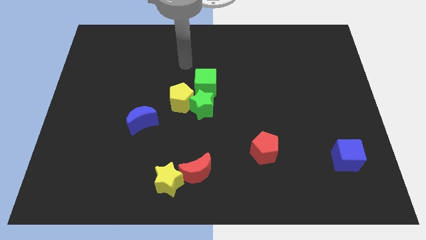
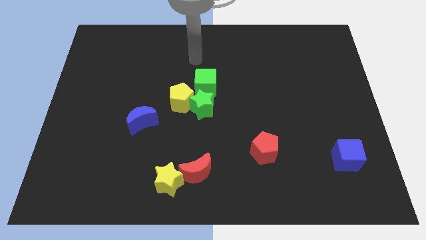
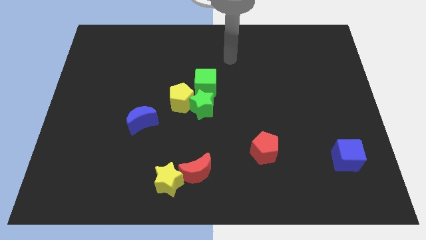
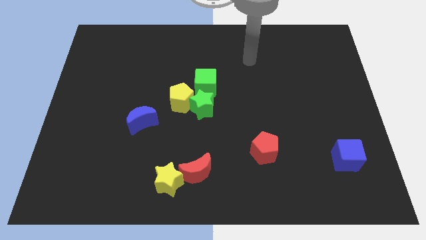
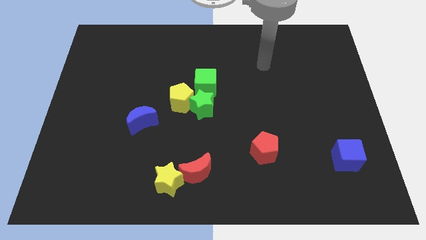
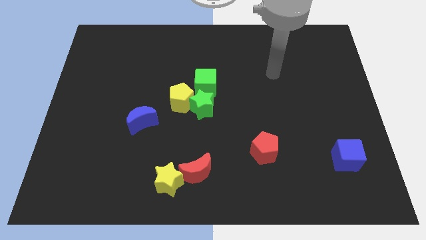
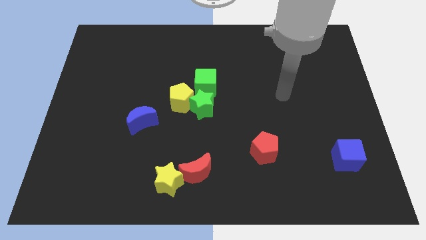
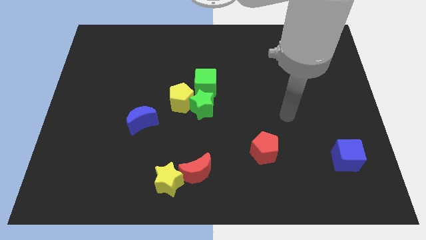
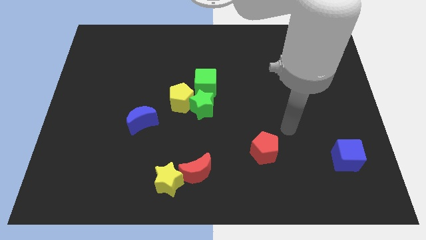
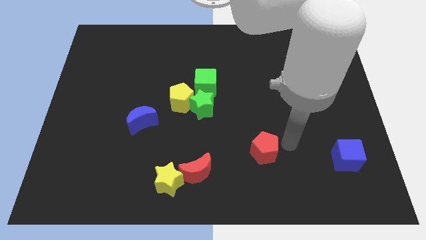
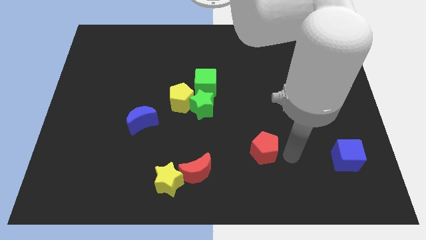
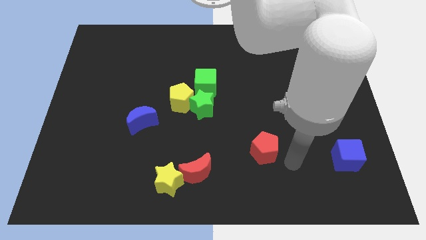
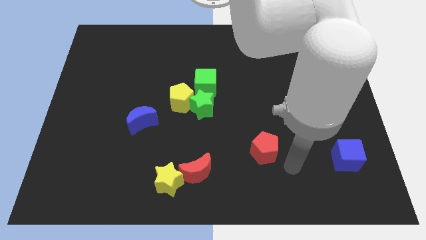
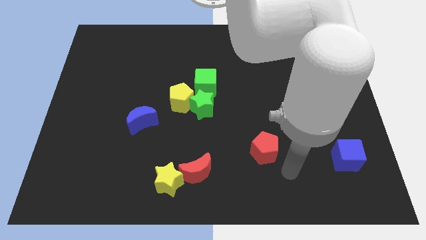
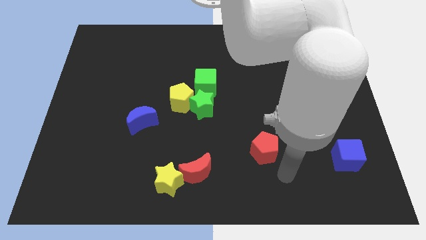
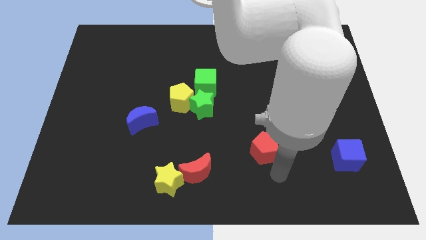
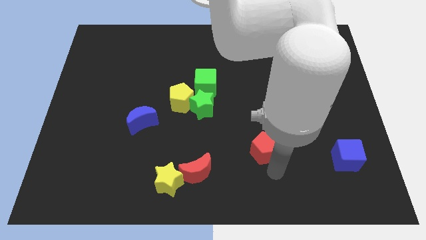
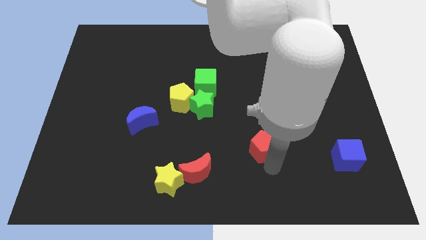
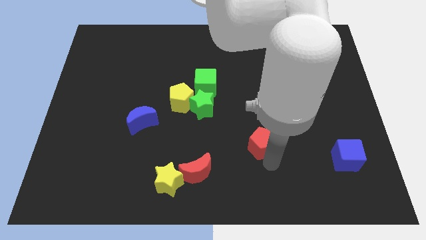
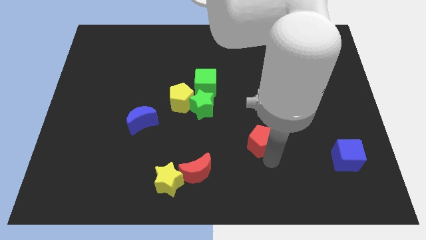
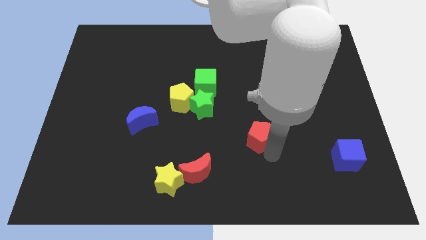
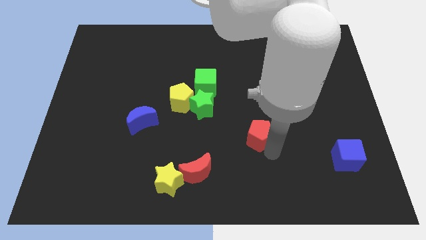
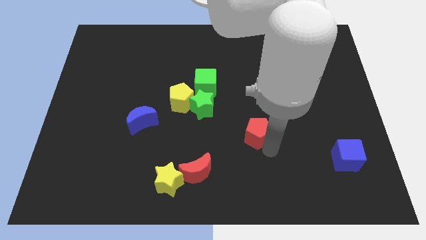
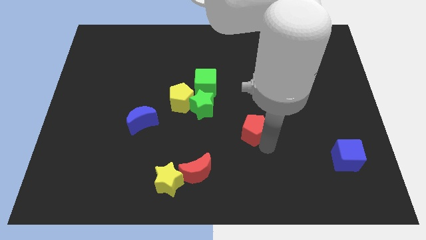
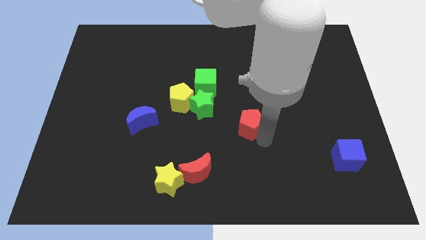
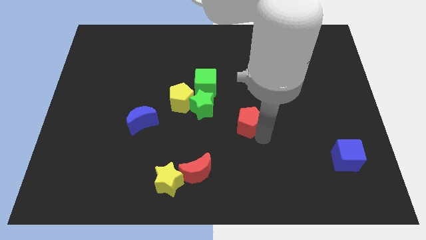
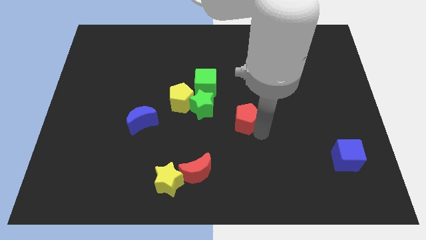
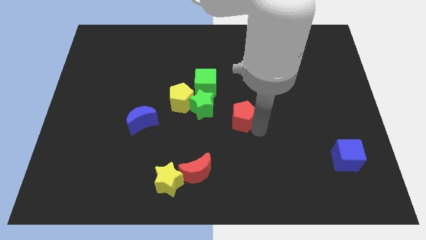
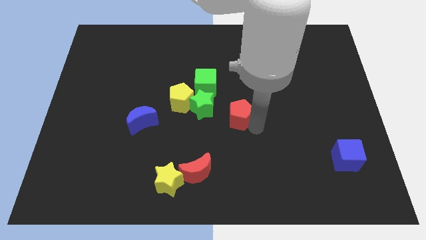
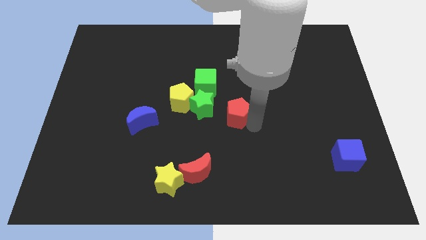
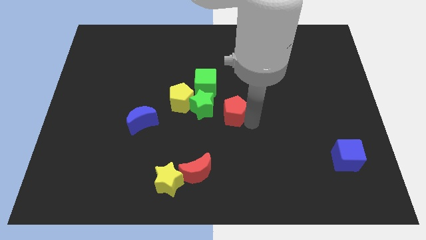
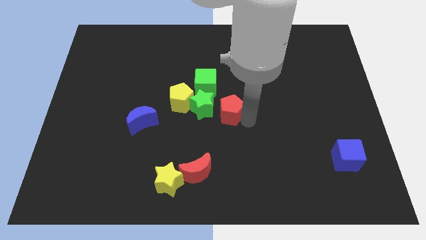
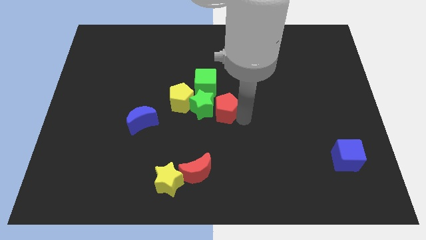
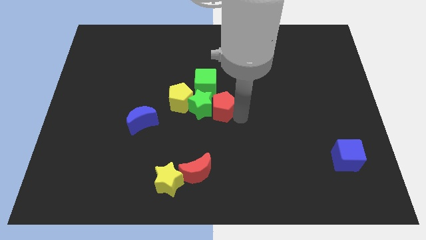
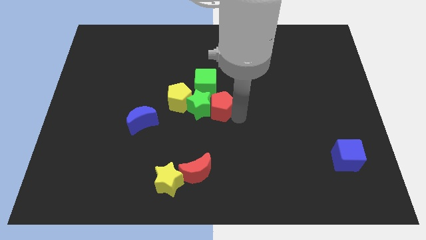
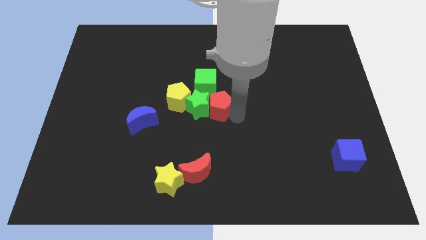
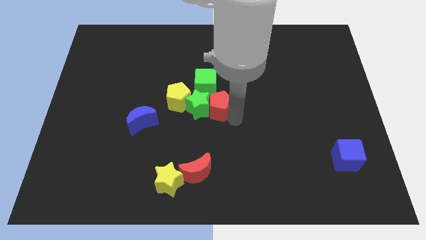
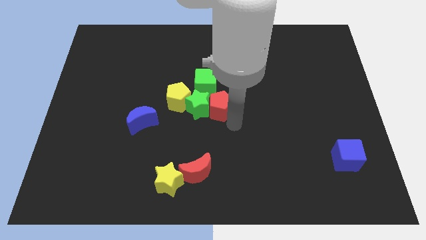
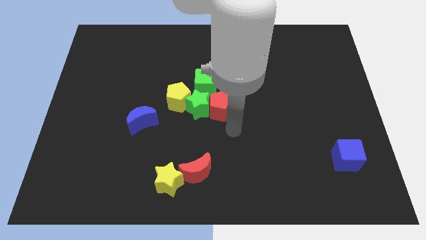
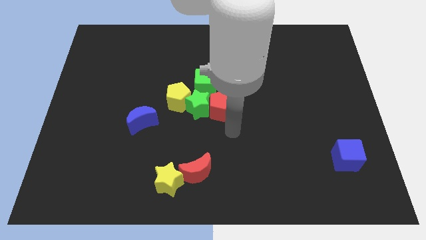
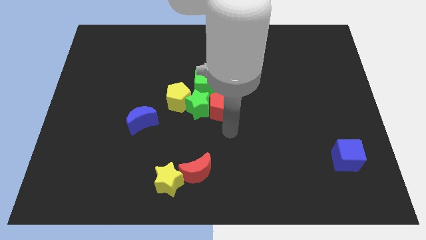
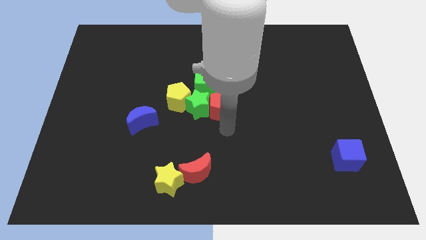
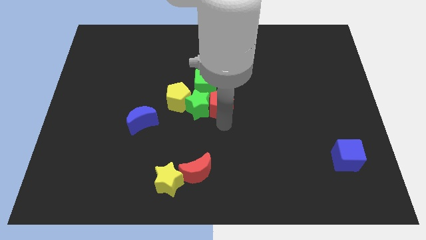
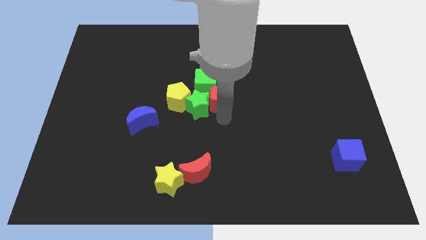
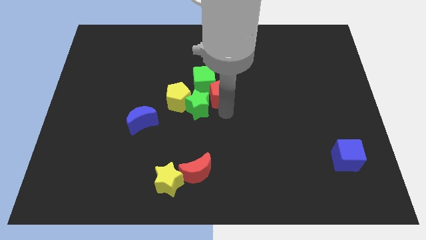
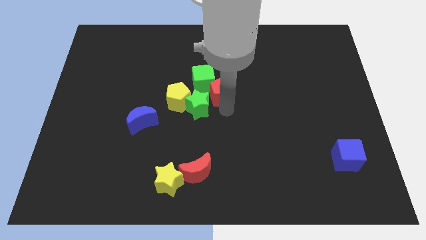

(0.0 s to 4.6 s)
slide the red pentagon next to the green cube

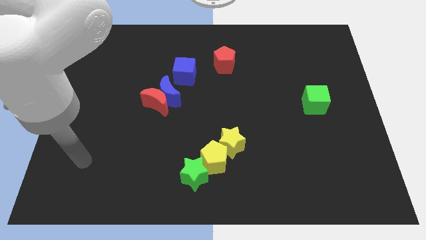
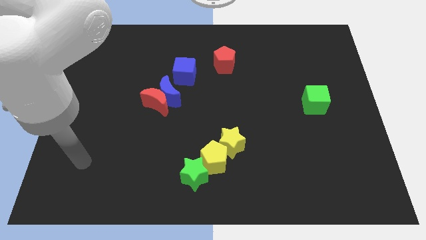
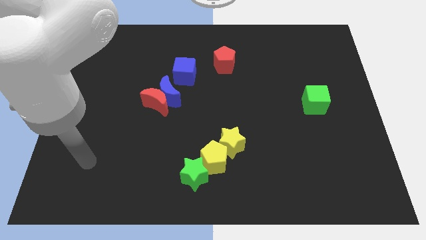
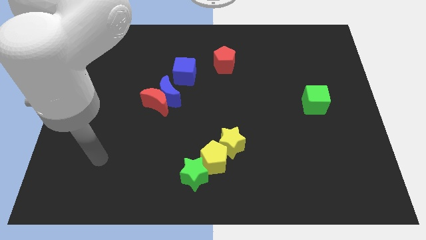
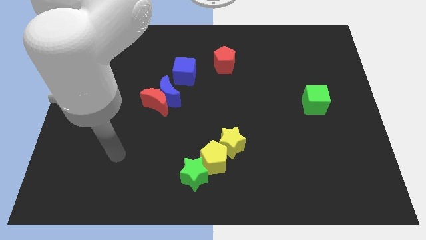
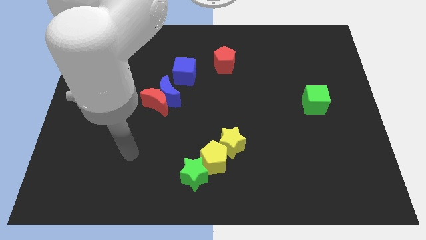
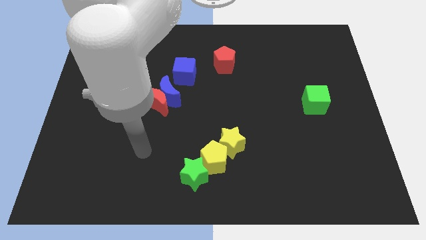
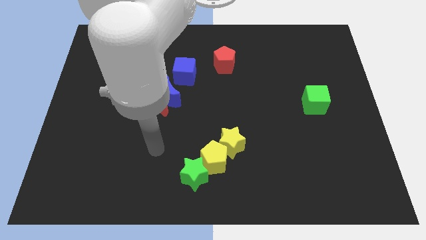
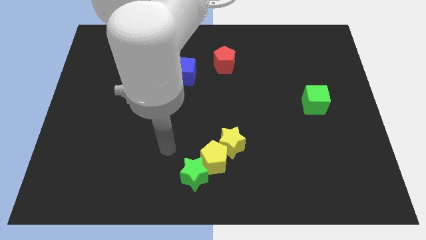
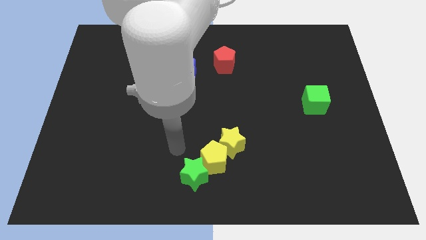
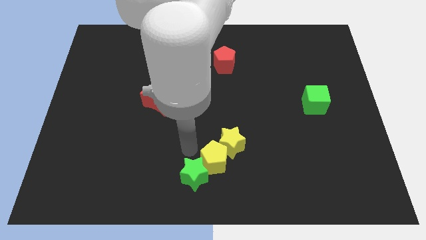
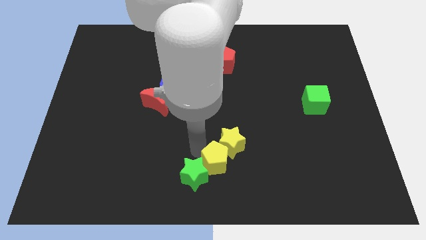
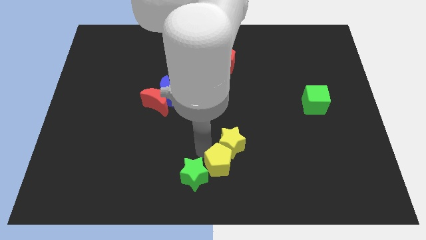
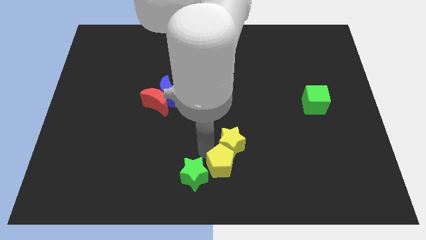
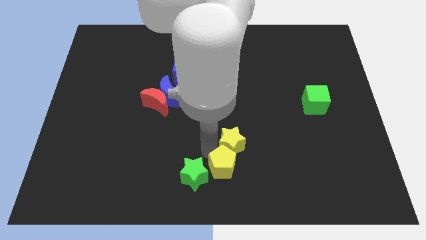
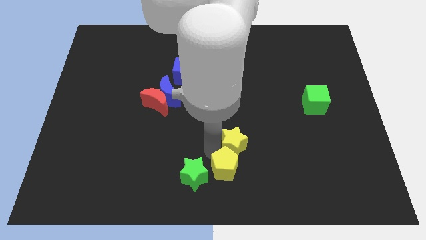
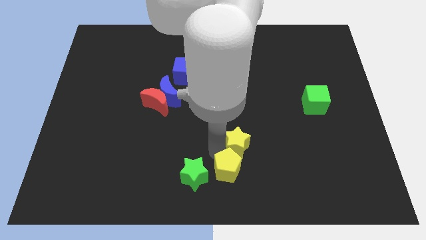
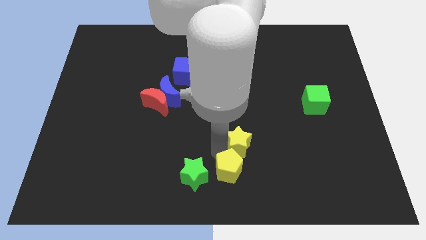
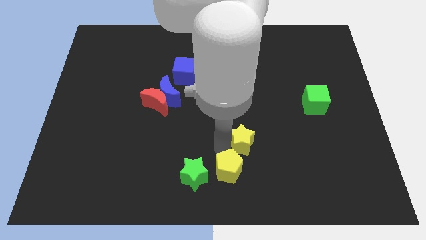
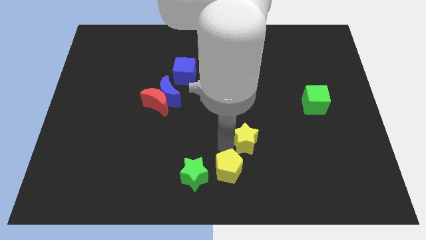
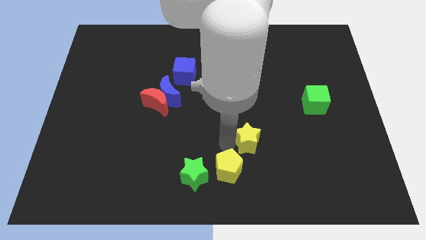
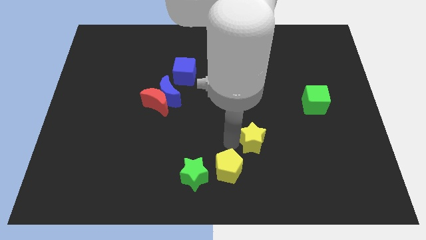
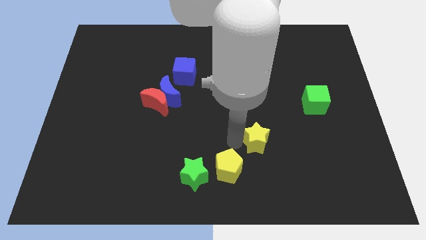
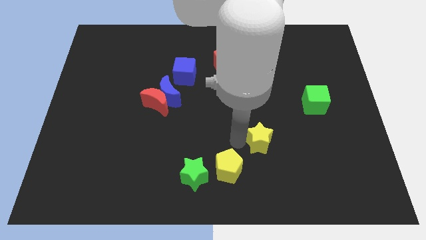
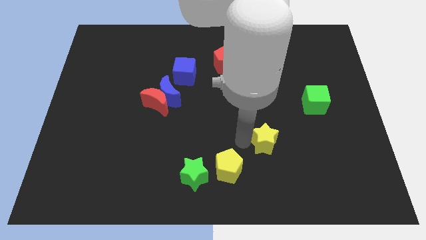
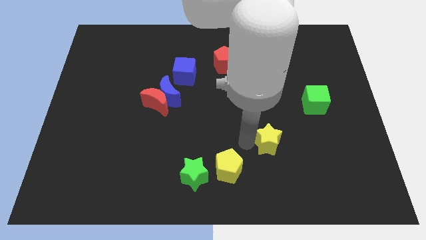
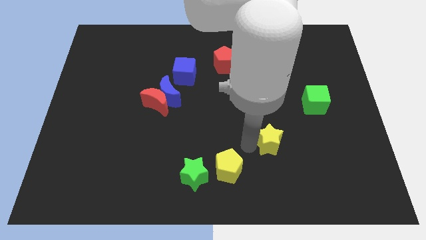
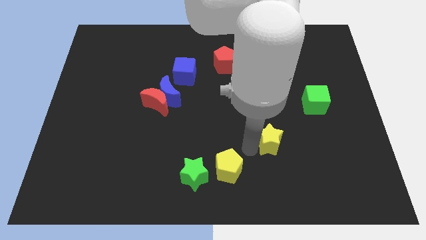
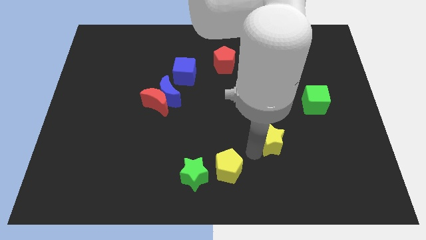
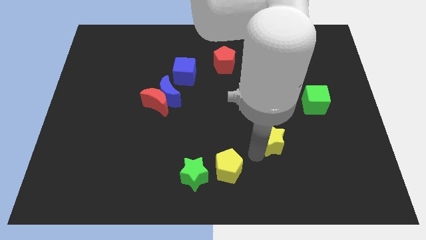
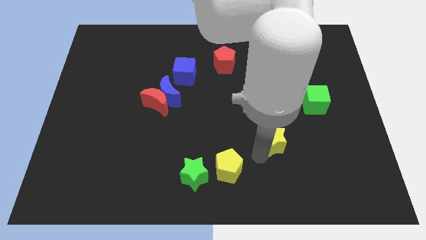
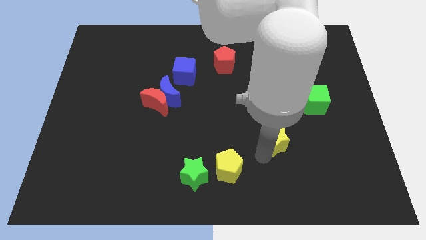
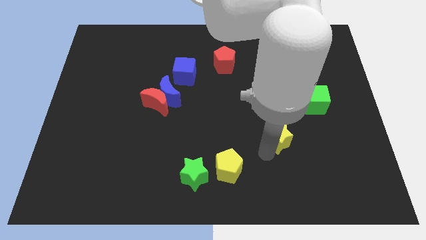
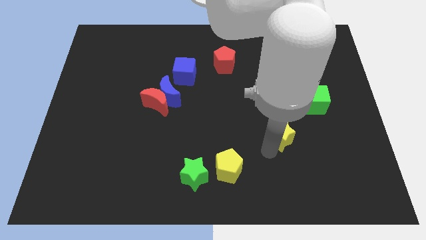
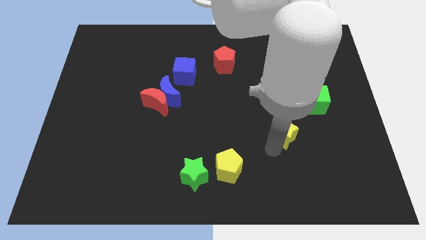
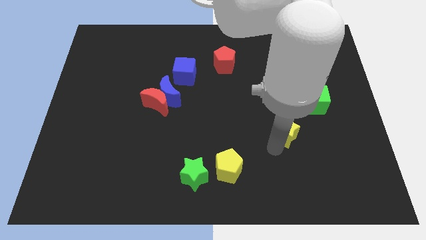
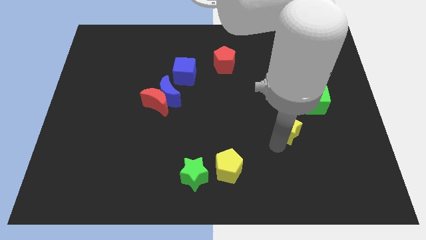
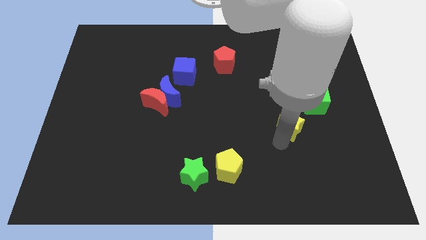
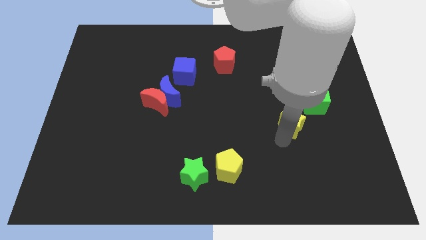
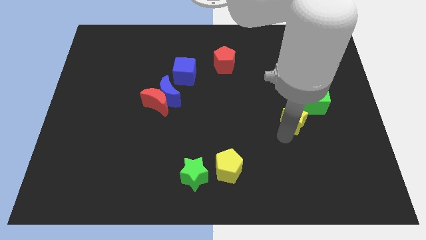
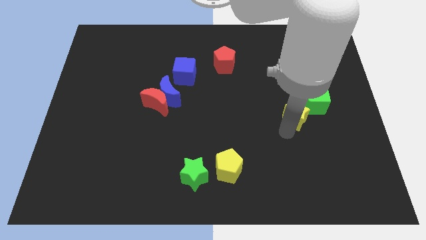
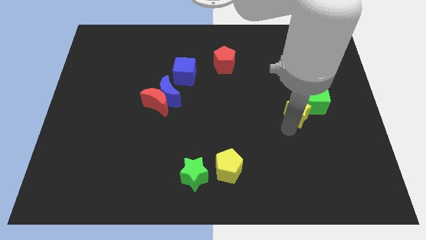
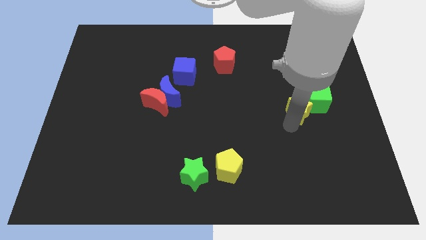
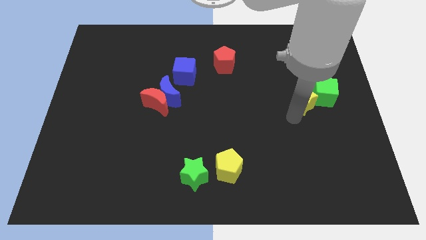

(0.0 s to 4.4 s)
slide the yellow star next to the green cube
